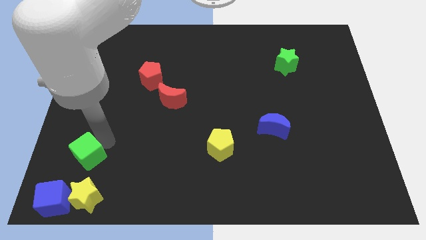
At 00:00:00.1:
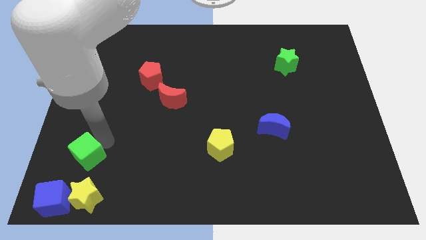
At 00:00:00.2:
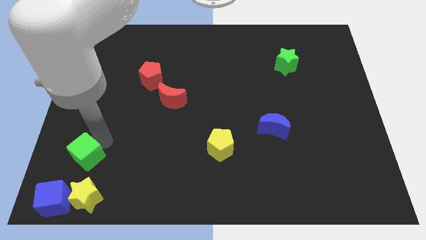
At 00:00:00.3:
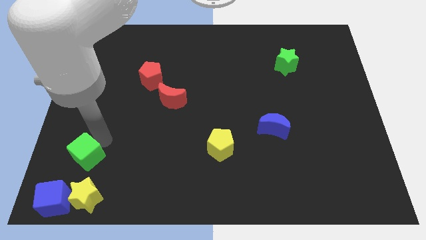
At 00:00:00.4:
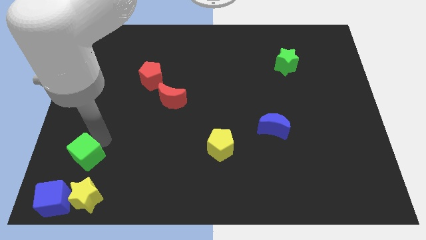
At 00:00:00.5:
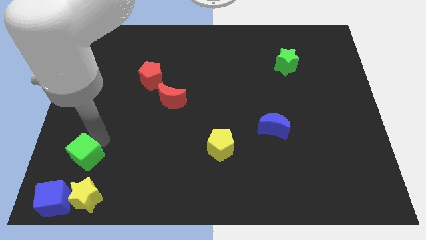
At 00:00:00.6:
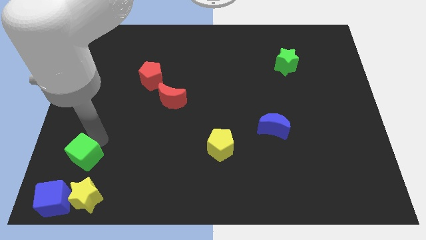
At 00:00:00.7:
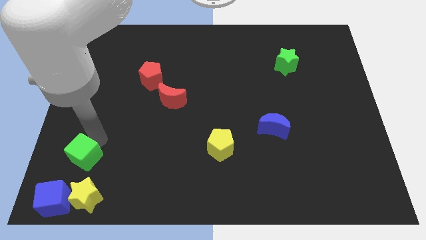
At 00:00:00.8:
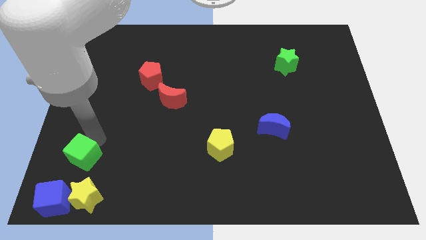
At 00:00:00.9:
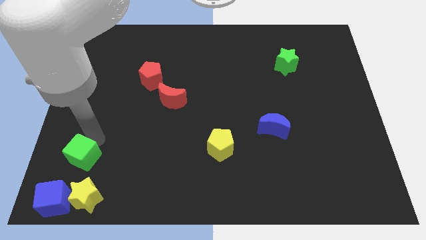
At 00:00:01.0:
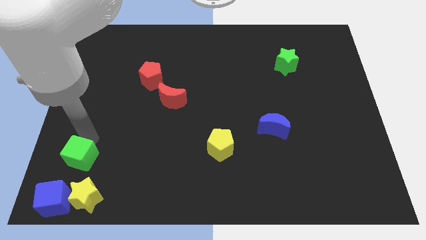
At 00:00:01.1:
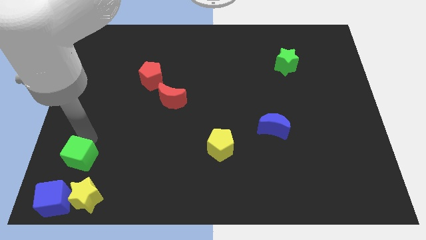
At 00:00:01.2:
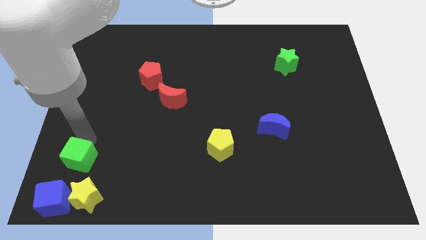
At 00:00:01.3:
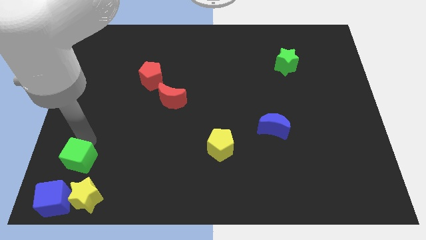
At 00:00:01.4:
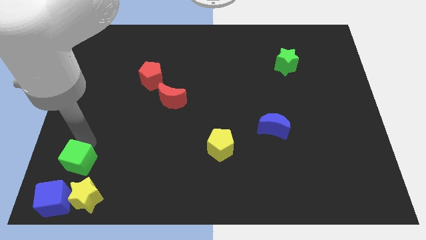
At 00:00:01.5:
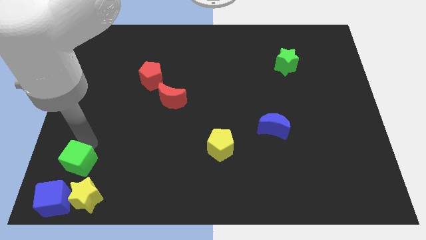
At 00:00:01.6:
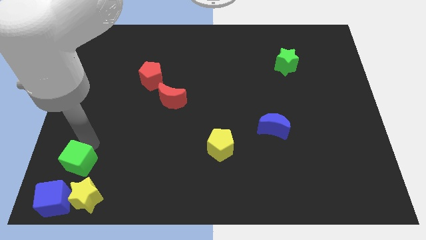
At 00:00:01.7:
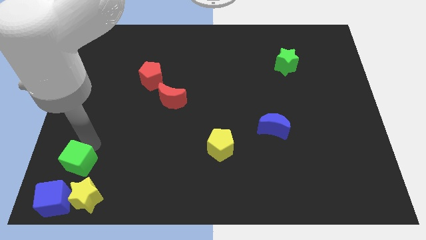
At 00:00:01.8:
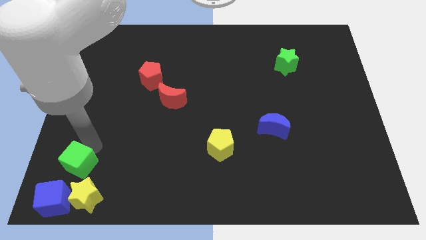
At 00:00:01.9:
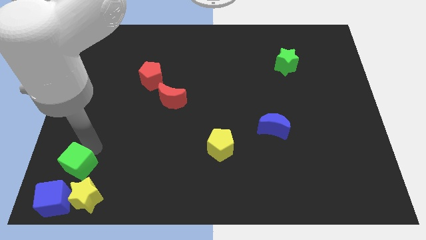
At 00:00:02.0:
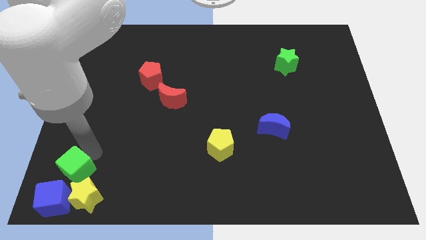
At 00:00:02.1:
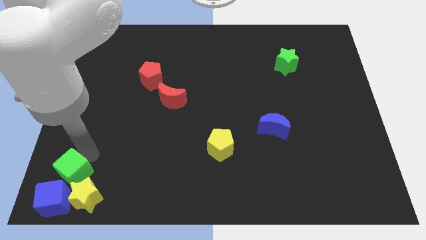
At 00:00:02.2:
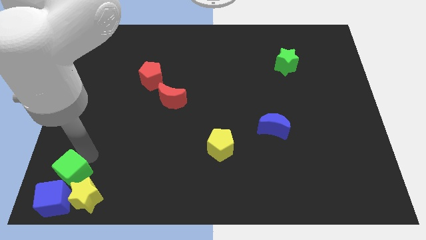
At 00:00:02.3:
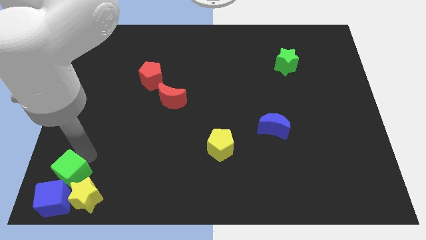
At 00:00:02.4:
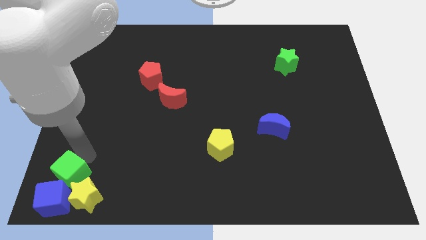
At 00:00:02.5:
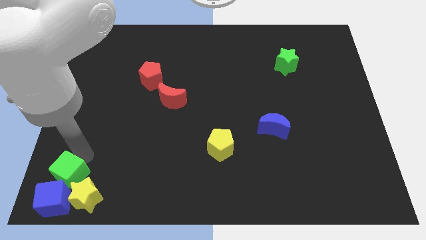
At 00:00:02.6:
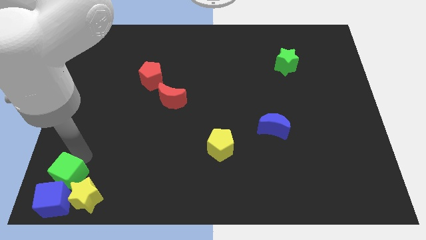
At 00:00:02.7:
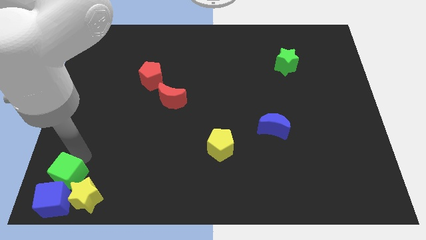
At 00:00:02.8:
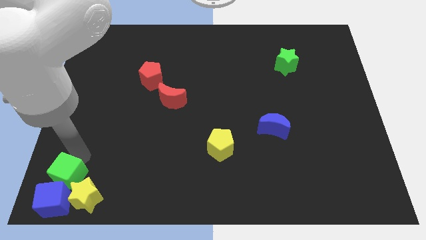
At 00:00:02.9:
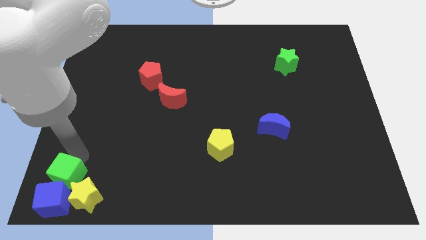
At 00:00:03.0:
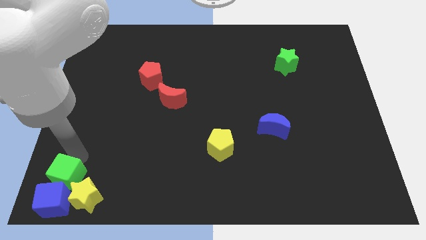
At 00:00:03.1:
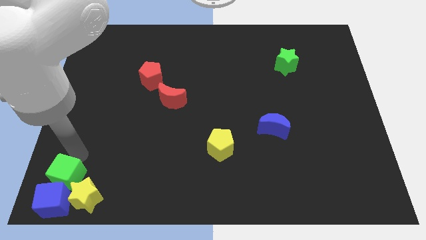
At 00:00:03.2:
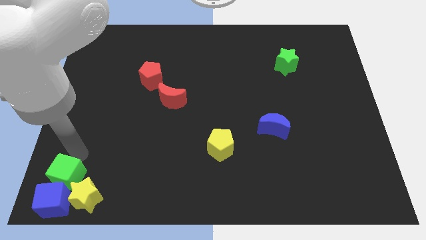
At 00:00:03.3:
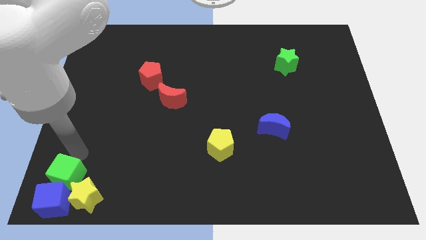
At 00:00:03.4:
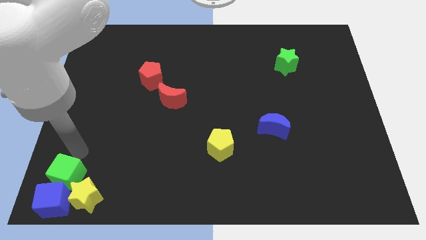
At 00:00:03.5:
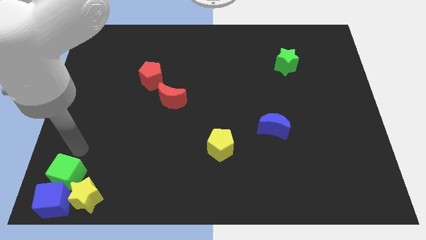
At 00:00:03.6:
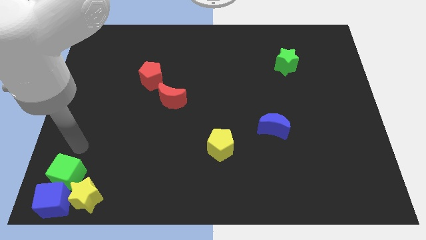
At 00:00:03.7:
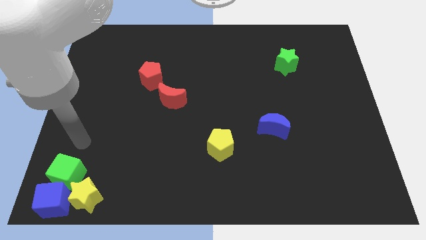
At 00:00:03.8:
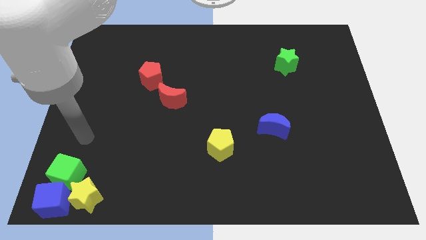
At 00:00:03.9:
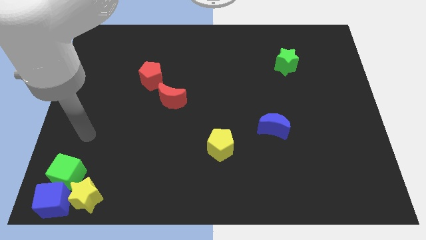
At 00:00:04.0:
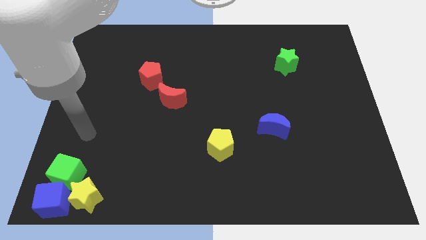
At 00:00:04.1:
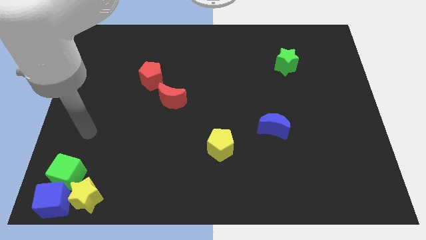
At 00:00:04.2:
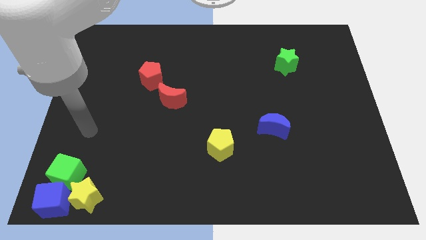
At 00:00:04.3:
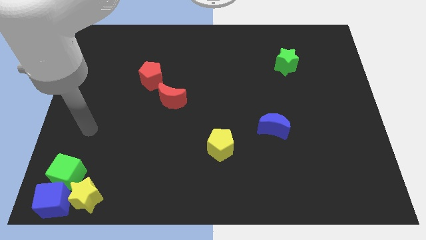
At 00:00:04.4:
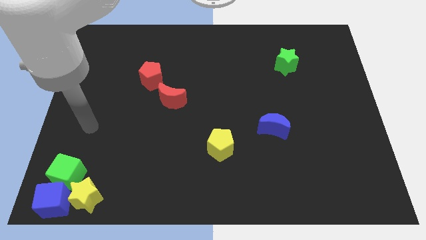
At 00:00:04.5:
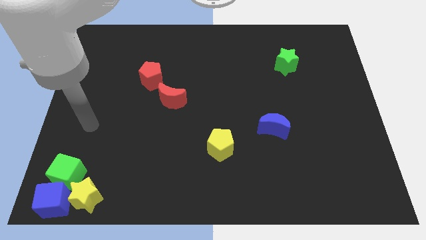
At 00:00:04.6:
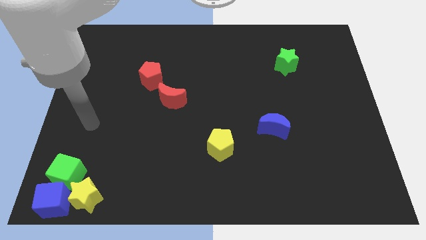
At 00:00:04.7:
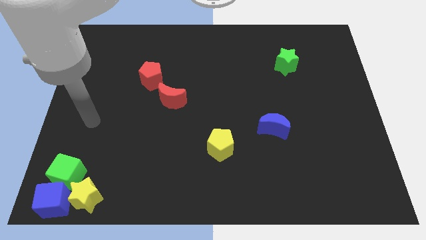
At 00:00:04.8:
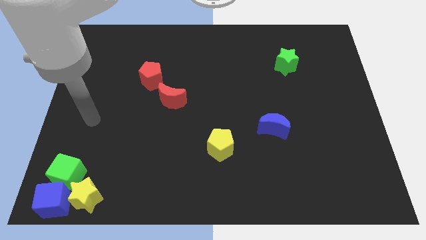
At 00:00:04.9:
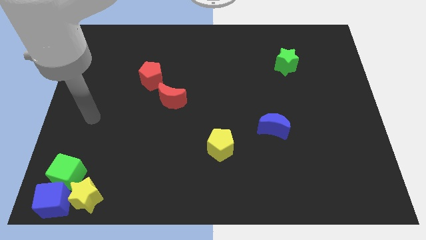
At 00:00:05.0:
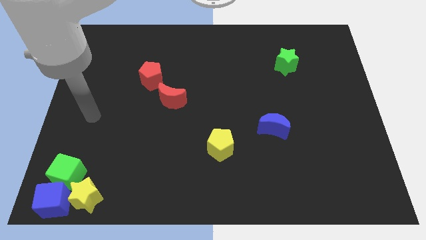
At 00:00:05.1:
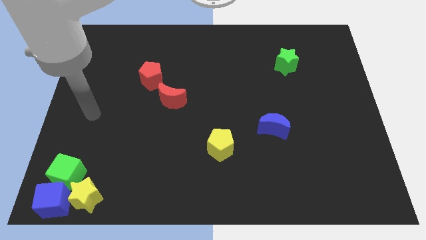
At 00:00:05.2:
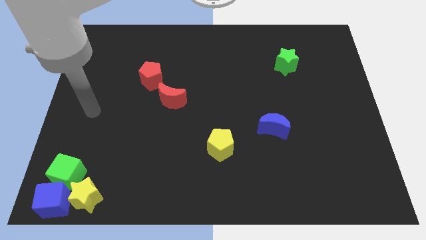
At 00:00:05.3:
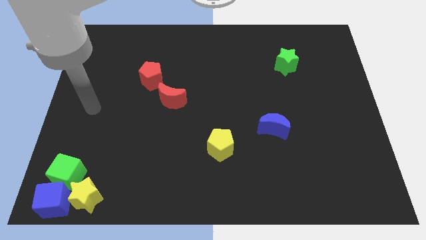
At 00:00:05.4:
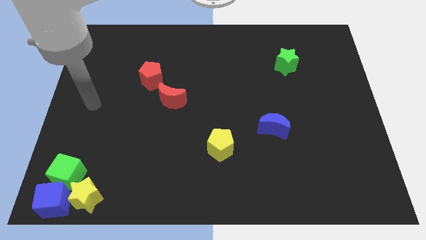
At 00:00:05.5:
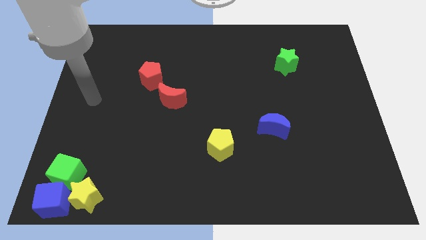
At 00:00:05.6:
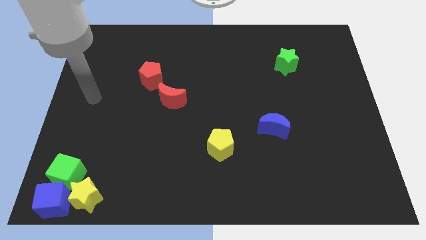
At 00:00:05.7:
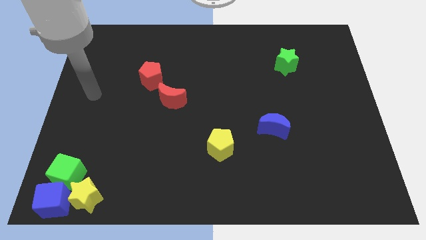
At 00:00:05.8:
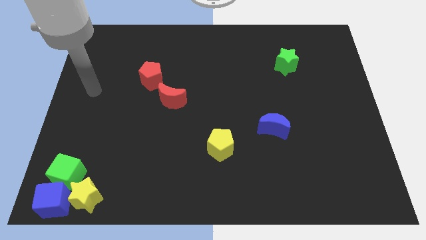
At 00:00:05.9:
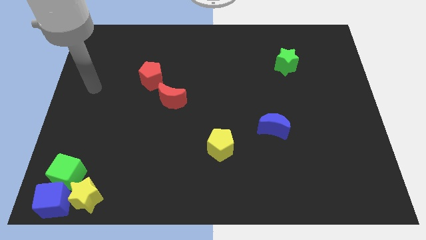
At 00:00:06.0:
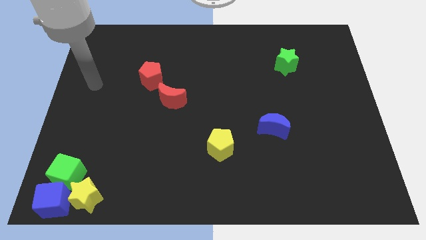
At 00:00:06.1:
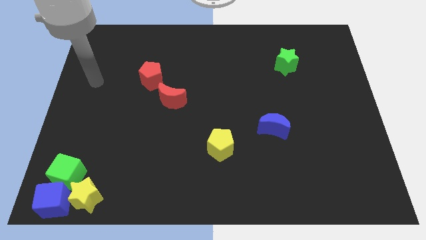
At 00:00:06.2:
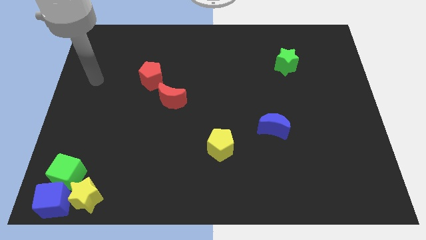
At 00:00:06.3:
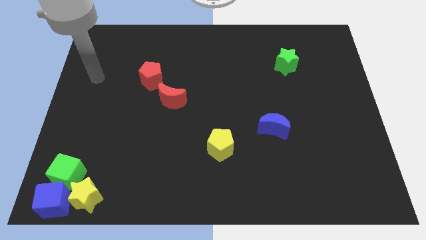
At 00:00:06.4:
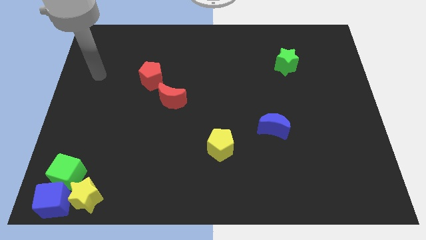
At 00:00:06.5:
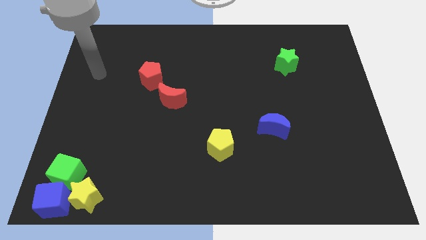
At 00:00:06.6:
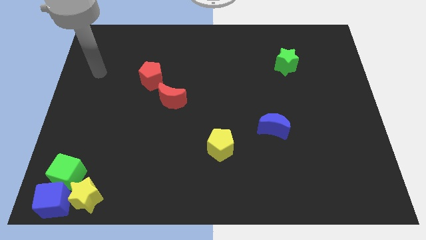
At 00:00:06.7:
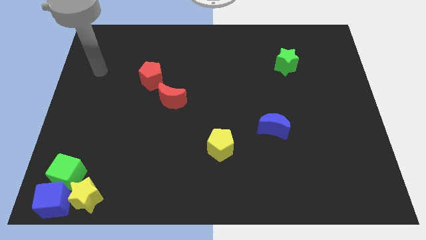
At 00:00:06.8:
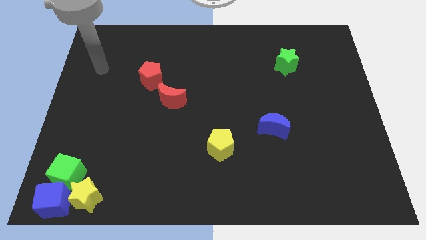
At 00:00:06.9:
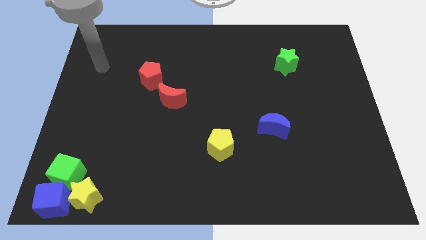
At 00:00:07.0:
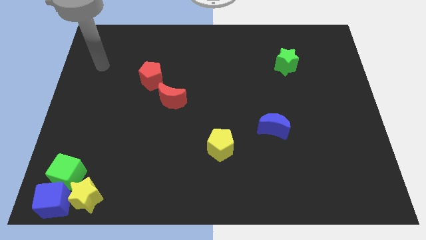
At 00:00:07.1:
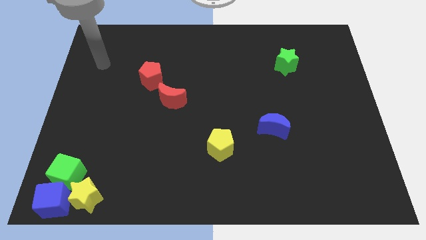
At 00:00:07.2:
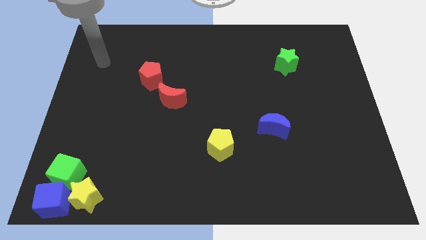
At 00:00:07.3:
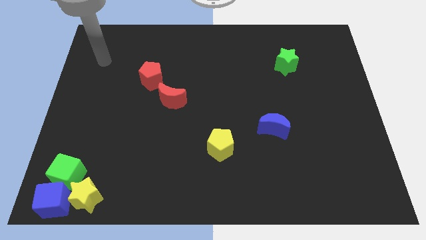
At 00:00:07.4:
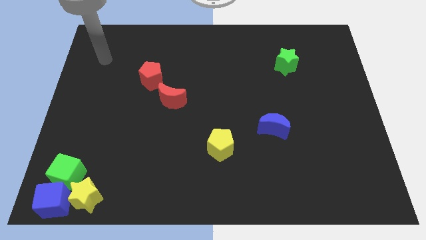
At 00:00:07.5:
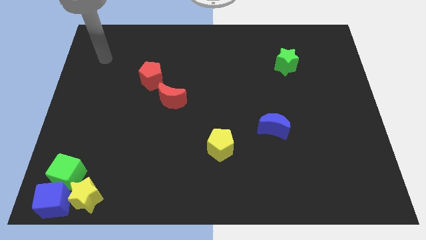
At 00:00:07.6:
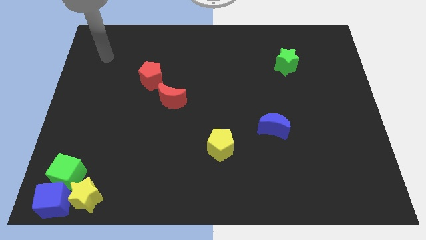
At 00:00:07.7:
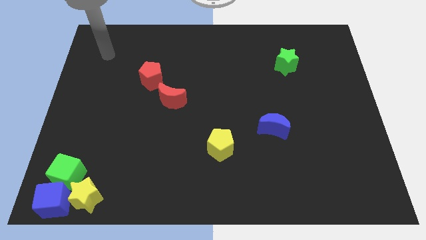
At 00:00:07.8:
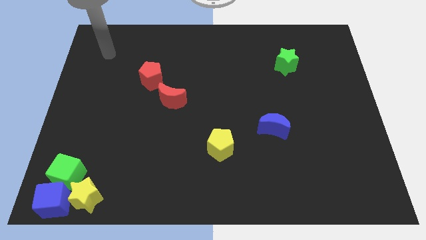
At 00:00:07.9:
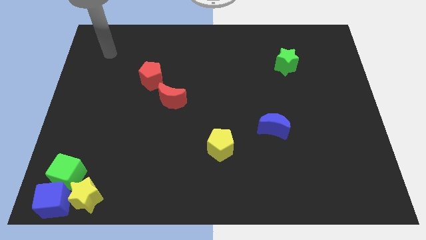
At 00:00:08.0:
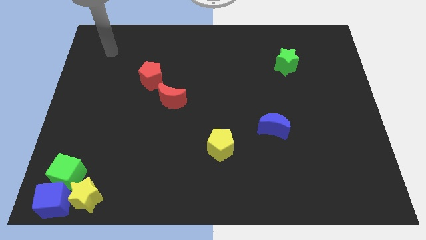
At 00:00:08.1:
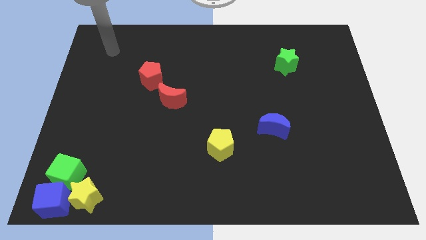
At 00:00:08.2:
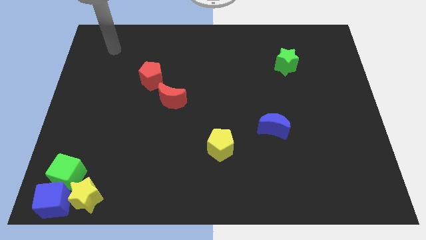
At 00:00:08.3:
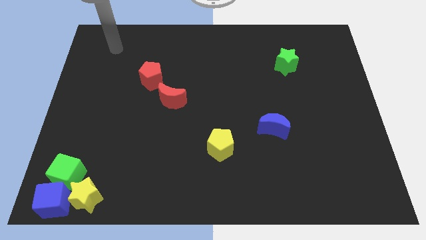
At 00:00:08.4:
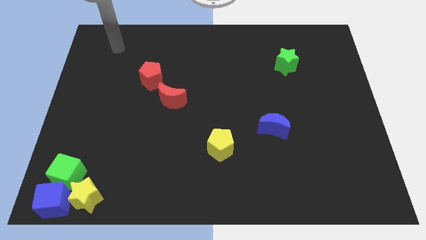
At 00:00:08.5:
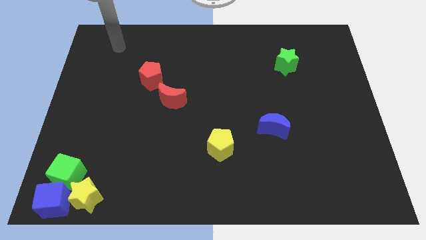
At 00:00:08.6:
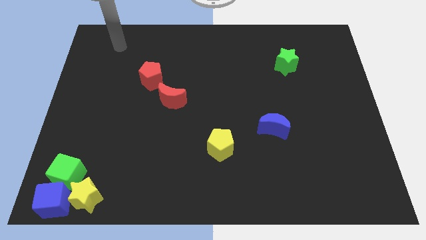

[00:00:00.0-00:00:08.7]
put the green cube into the blue cube

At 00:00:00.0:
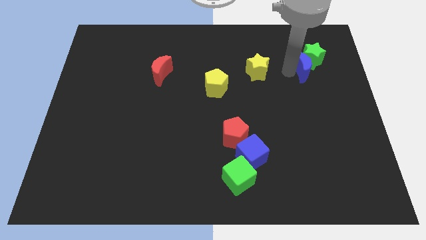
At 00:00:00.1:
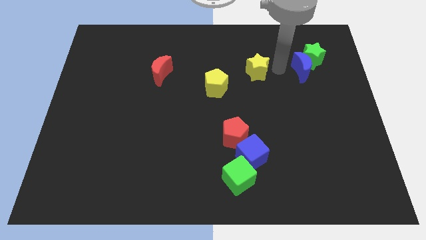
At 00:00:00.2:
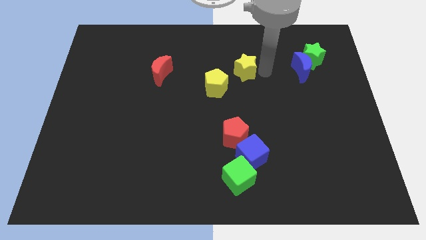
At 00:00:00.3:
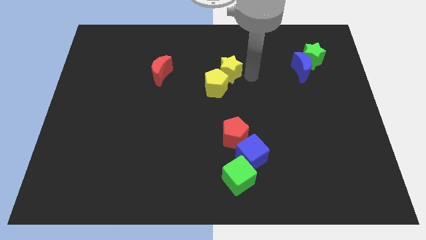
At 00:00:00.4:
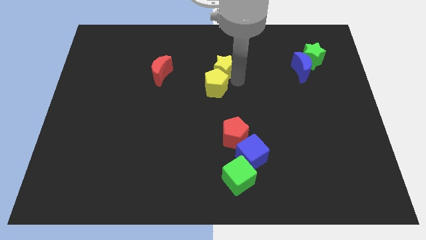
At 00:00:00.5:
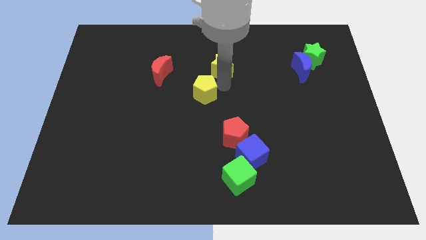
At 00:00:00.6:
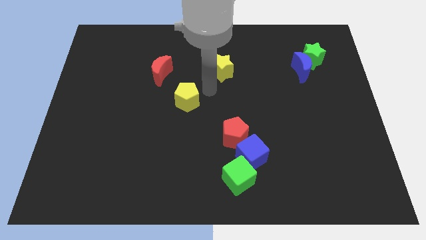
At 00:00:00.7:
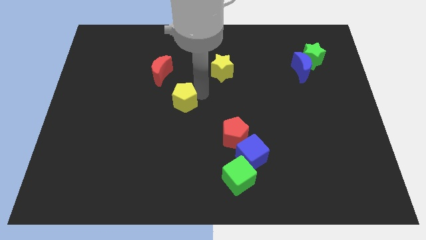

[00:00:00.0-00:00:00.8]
push the yellow star and yellow pentagon towards the left side of the board
